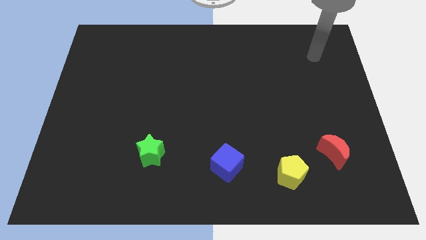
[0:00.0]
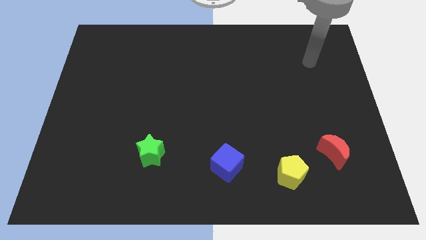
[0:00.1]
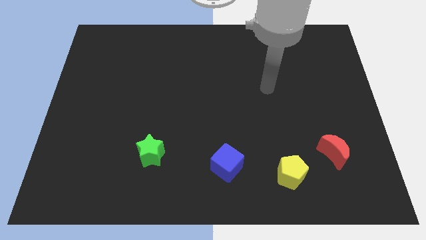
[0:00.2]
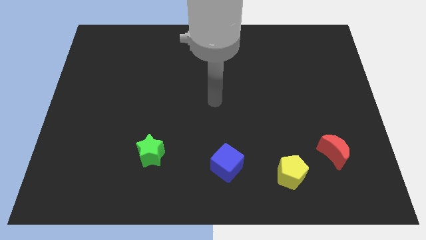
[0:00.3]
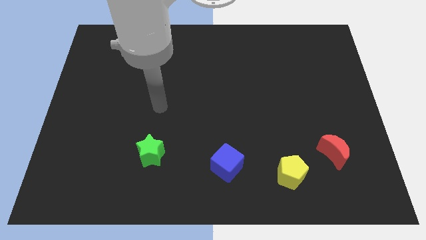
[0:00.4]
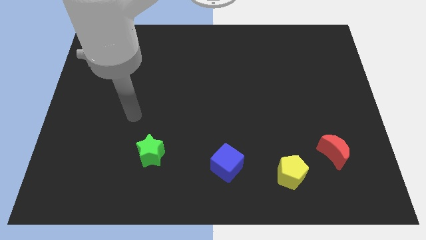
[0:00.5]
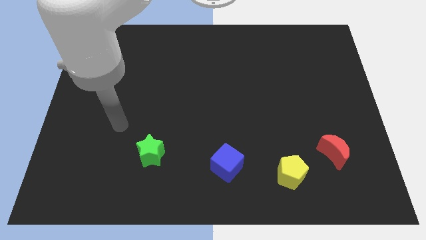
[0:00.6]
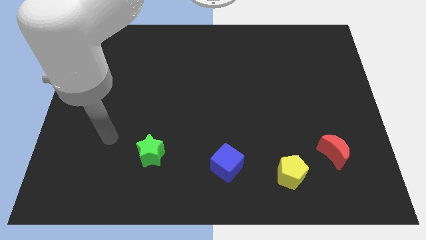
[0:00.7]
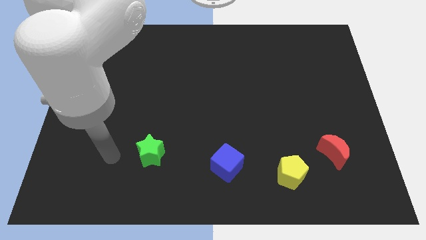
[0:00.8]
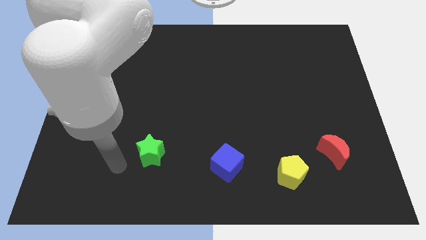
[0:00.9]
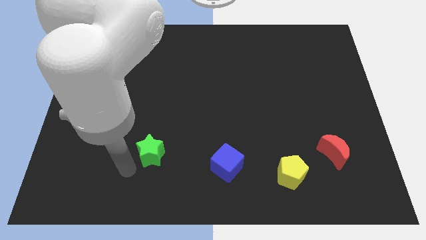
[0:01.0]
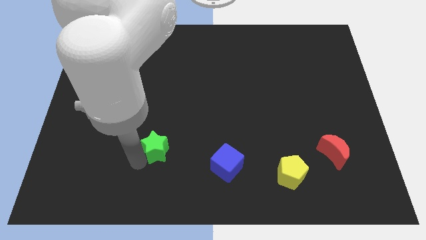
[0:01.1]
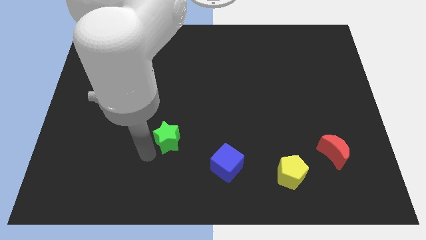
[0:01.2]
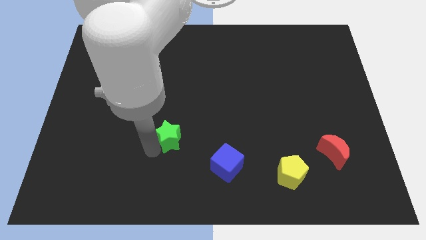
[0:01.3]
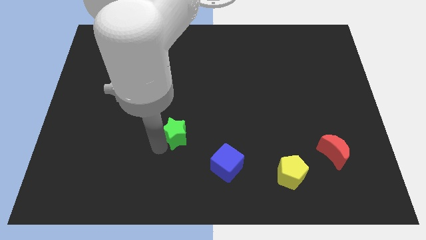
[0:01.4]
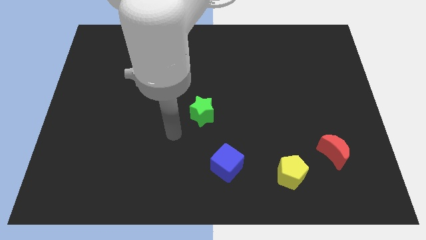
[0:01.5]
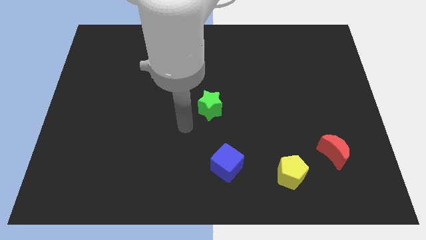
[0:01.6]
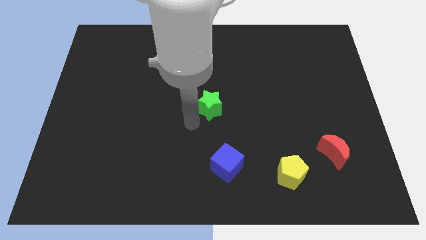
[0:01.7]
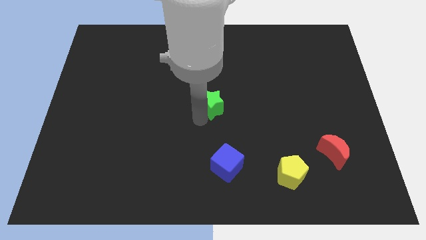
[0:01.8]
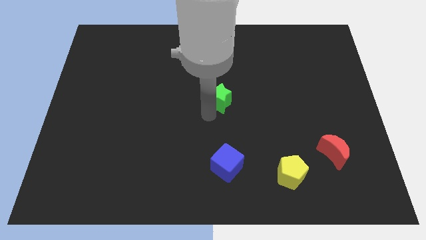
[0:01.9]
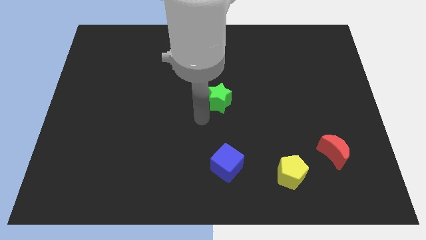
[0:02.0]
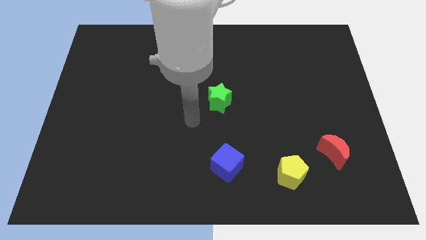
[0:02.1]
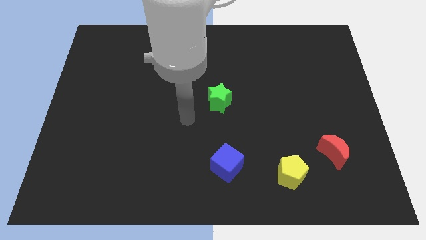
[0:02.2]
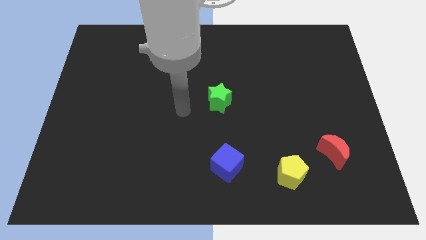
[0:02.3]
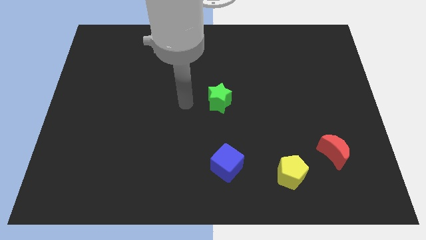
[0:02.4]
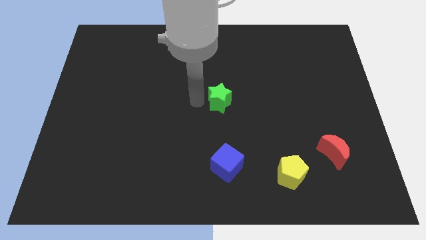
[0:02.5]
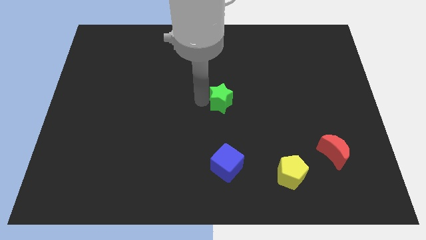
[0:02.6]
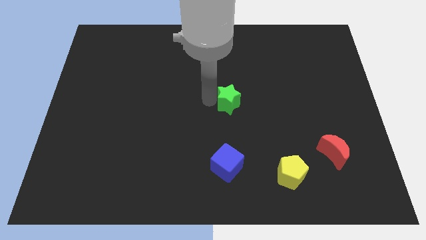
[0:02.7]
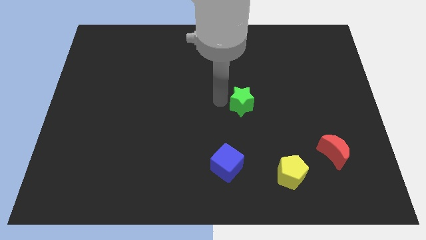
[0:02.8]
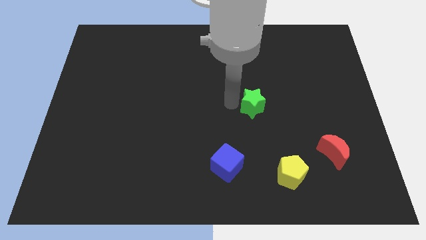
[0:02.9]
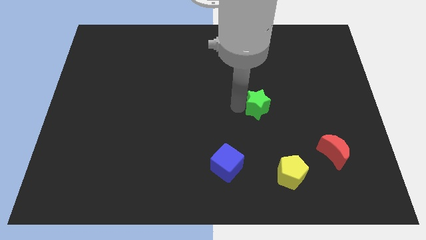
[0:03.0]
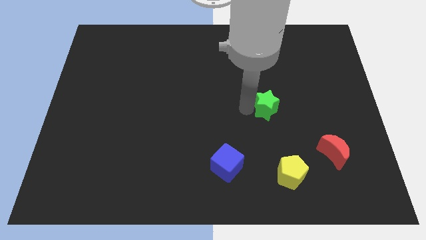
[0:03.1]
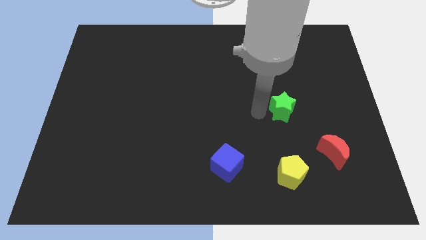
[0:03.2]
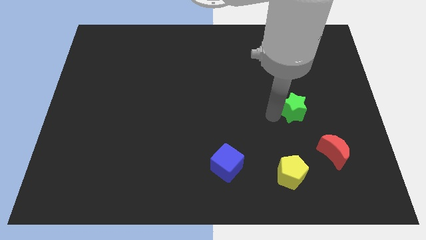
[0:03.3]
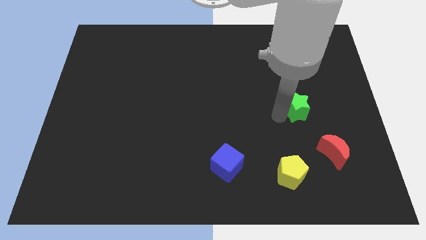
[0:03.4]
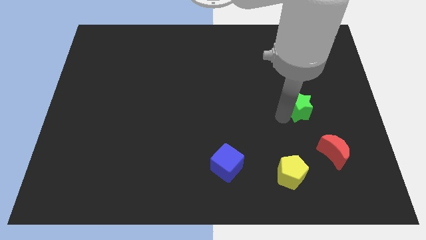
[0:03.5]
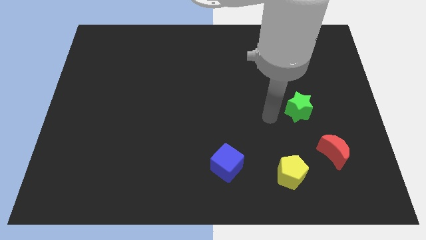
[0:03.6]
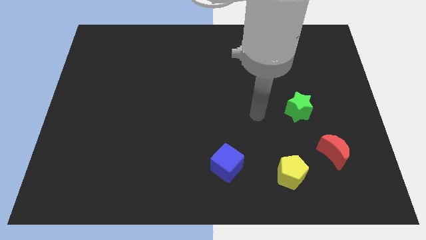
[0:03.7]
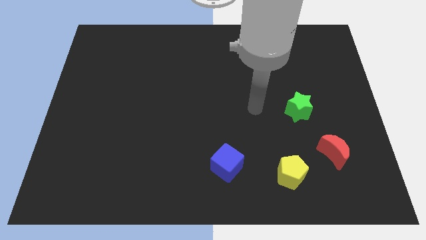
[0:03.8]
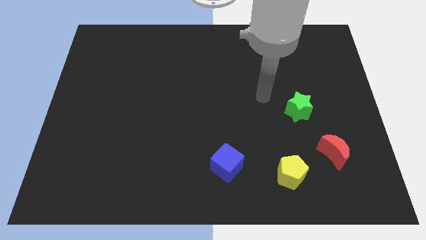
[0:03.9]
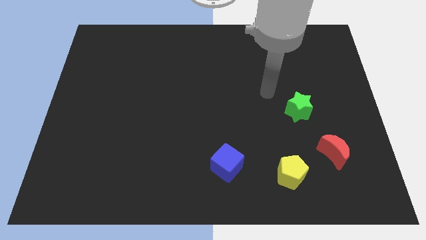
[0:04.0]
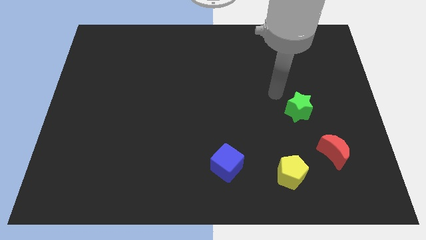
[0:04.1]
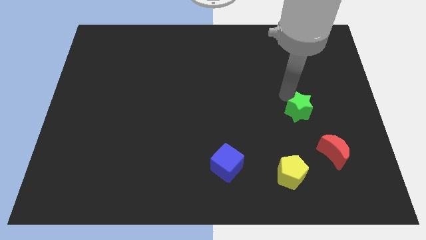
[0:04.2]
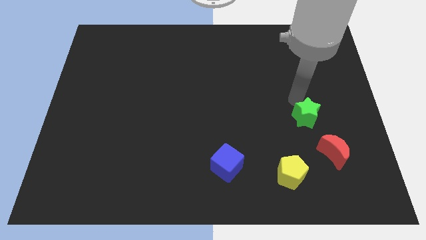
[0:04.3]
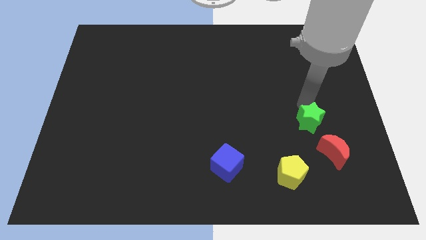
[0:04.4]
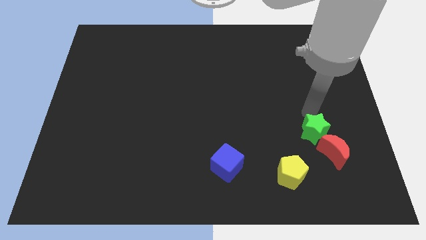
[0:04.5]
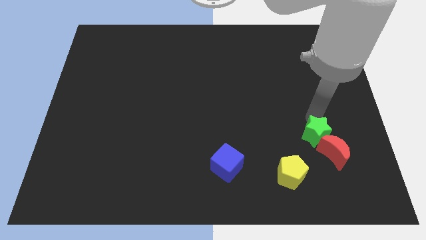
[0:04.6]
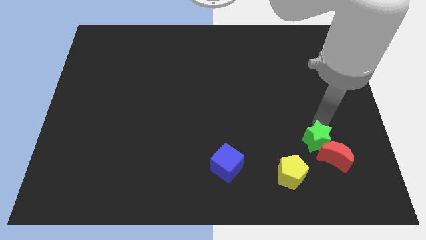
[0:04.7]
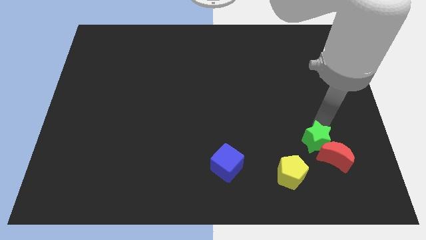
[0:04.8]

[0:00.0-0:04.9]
push the star close to the red moon

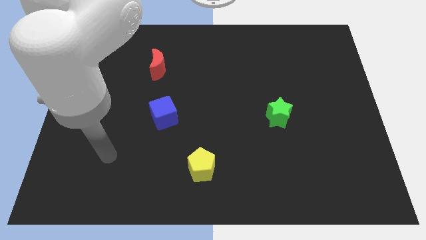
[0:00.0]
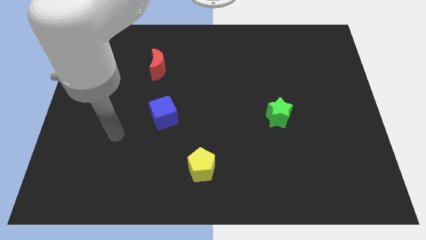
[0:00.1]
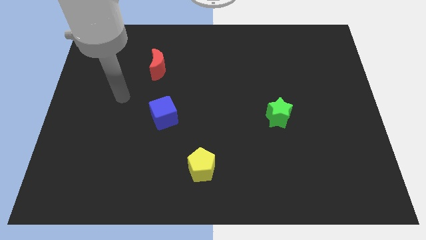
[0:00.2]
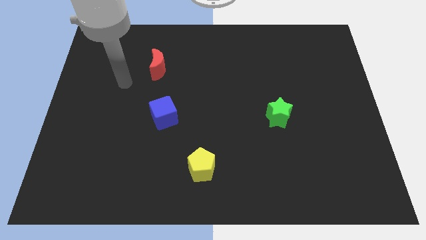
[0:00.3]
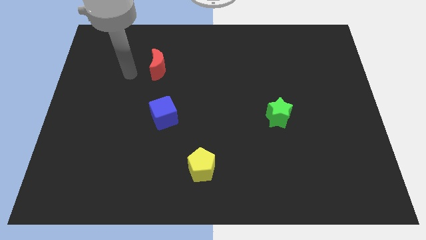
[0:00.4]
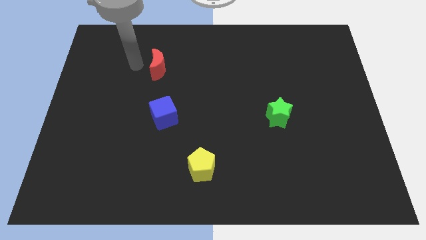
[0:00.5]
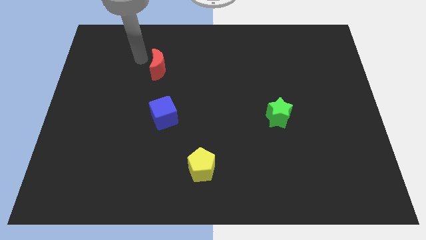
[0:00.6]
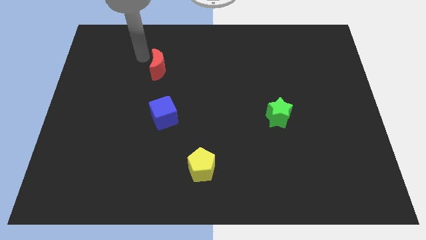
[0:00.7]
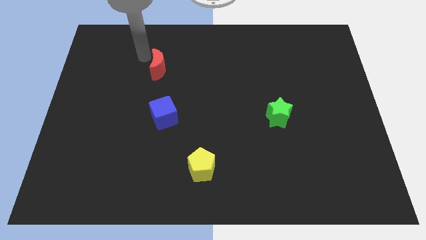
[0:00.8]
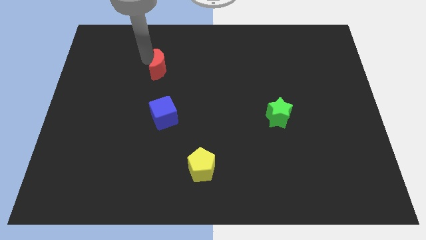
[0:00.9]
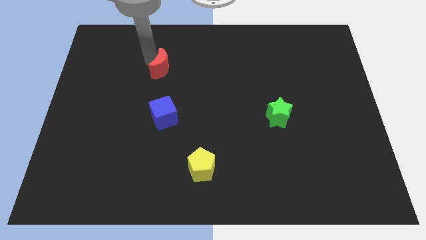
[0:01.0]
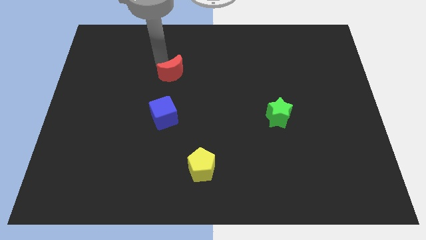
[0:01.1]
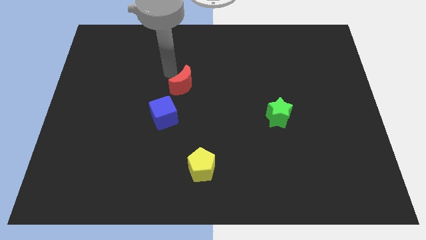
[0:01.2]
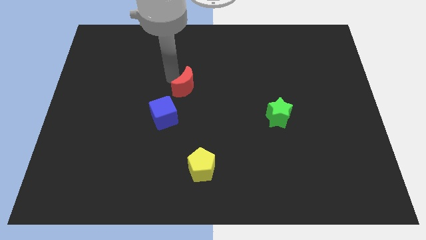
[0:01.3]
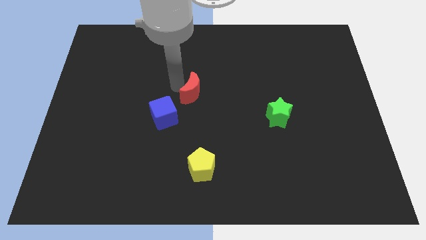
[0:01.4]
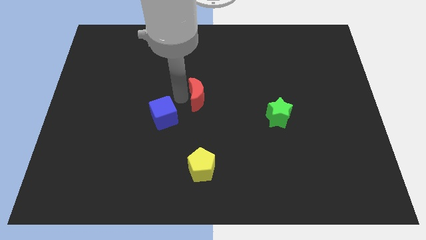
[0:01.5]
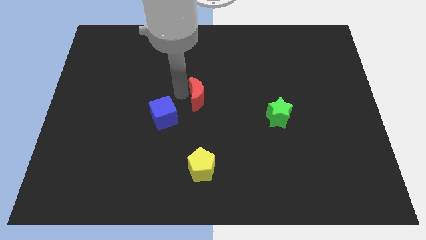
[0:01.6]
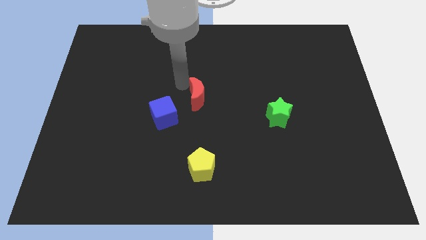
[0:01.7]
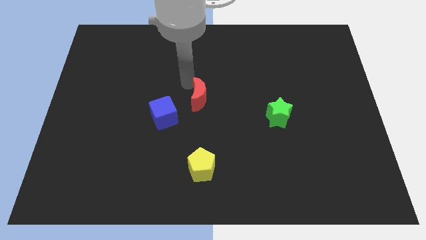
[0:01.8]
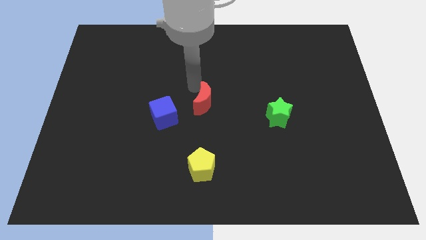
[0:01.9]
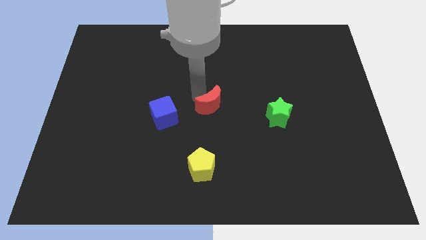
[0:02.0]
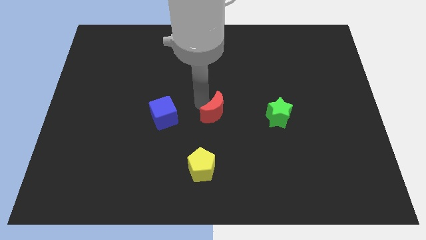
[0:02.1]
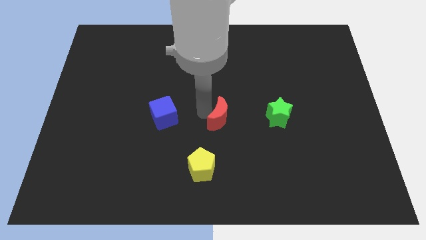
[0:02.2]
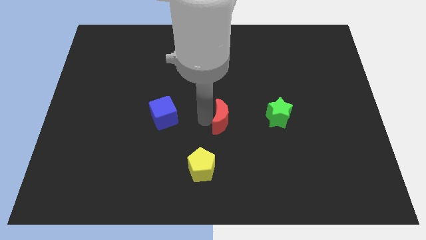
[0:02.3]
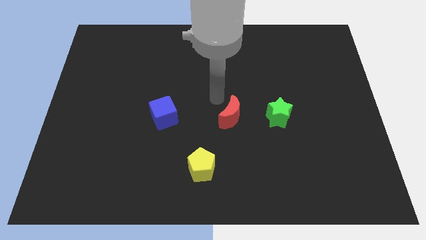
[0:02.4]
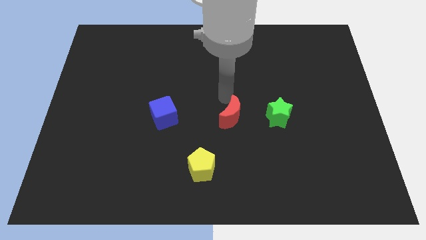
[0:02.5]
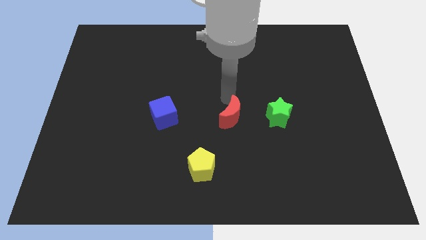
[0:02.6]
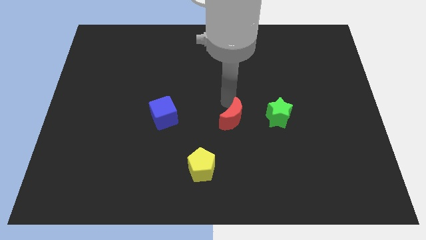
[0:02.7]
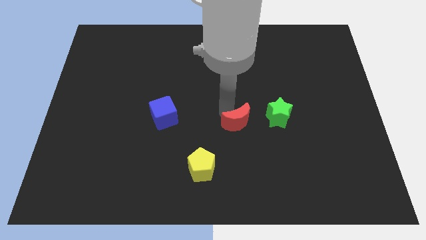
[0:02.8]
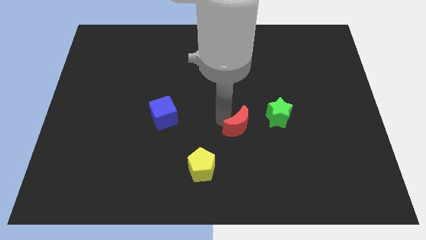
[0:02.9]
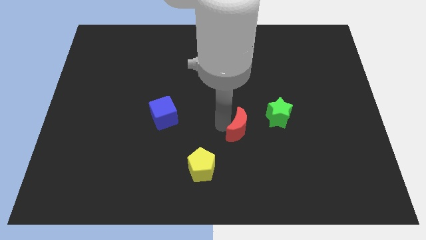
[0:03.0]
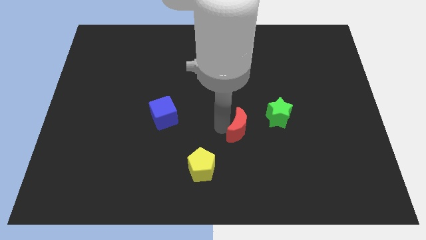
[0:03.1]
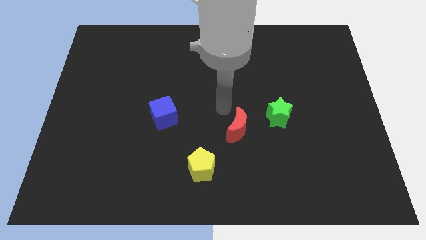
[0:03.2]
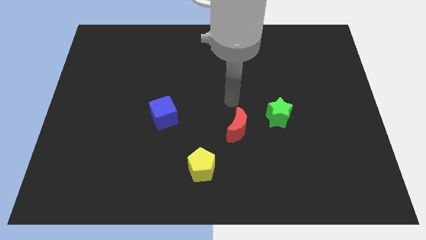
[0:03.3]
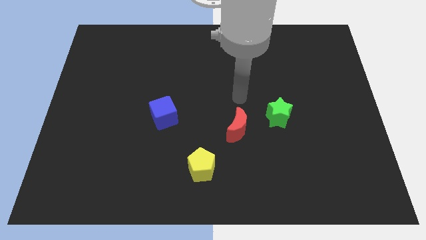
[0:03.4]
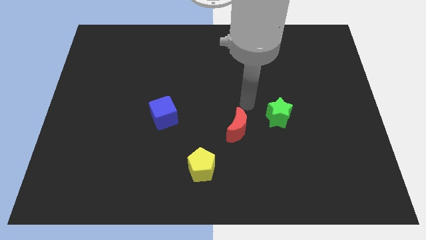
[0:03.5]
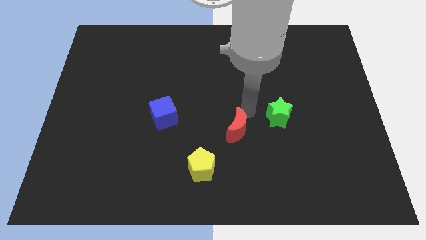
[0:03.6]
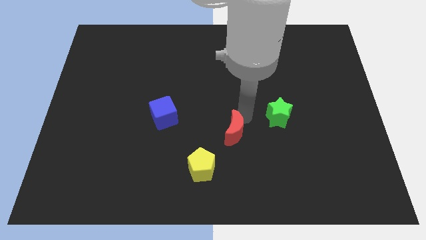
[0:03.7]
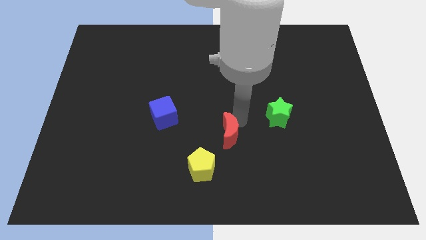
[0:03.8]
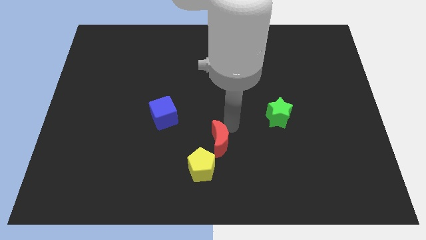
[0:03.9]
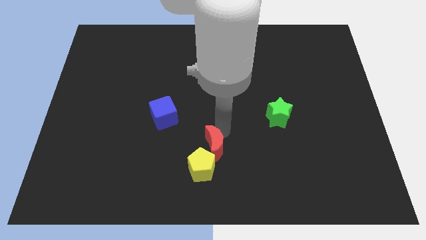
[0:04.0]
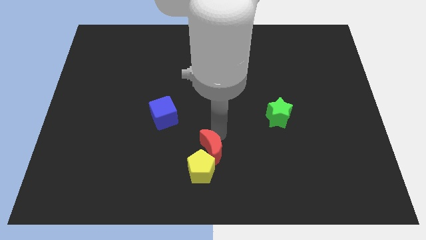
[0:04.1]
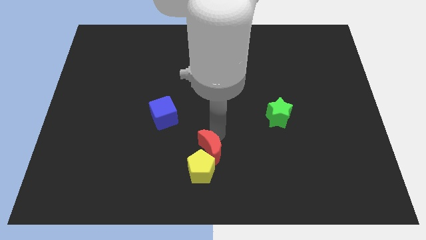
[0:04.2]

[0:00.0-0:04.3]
push the red block towards the pentagon
